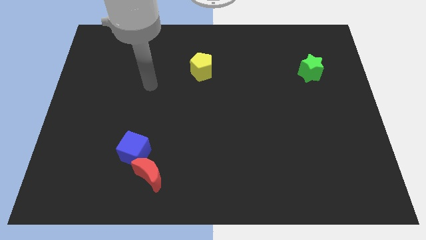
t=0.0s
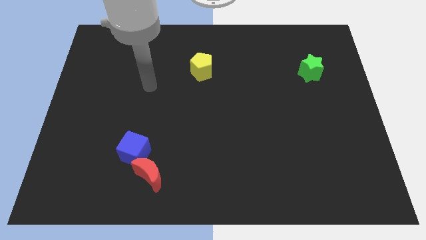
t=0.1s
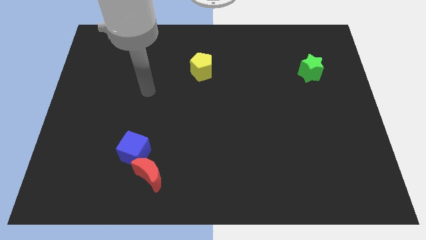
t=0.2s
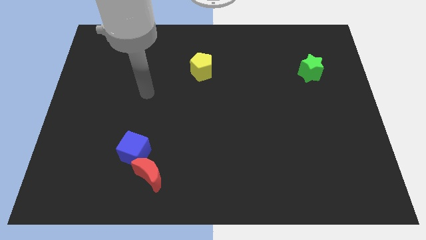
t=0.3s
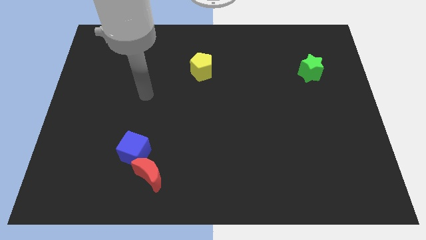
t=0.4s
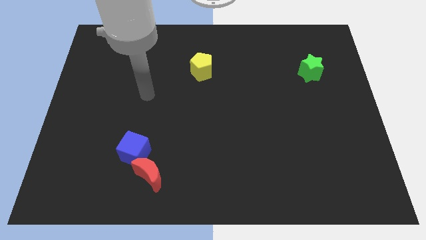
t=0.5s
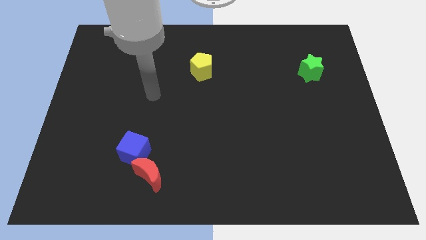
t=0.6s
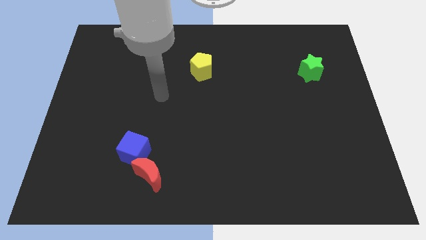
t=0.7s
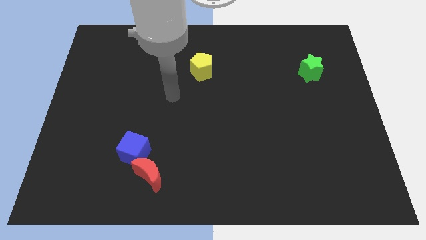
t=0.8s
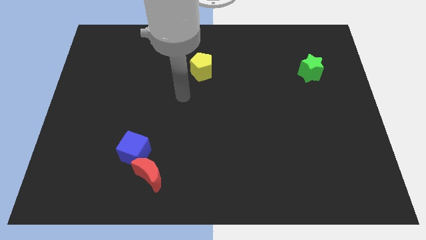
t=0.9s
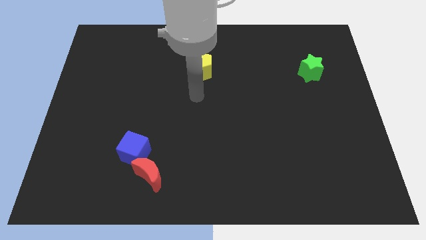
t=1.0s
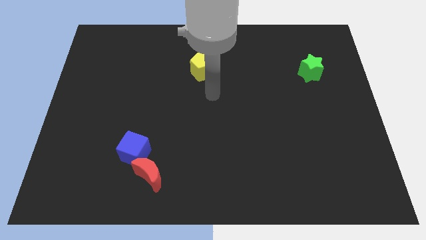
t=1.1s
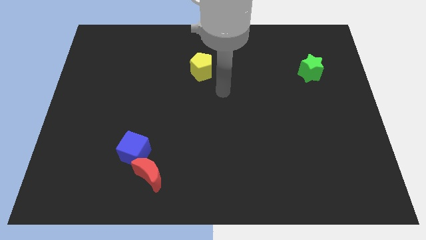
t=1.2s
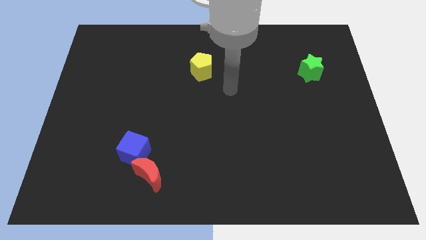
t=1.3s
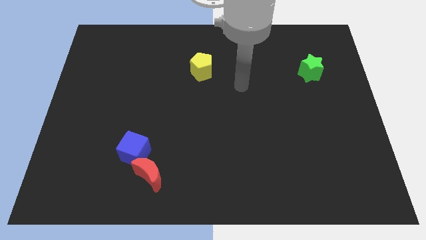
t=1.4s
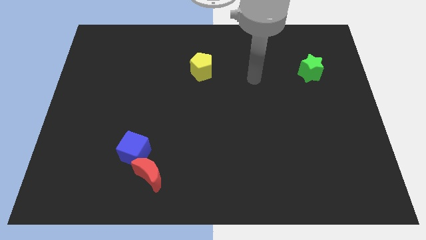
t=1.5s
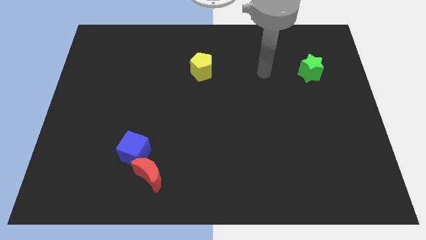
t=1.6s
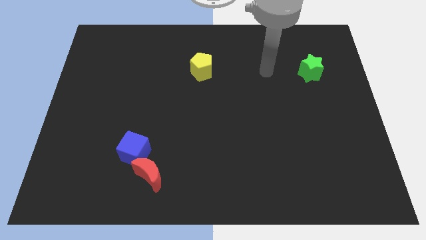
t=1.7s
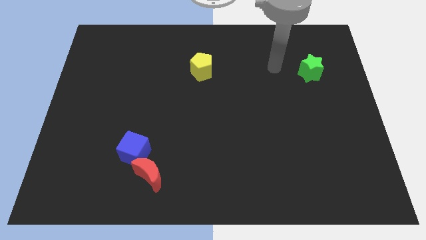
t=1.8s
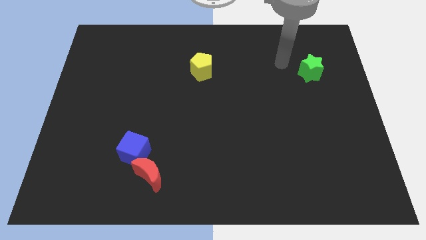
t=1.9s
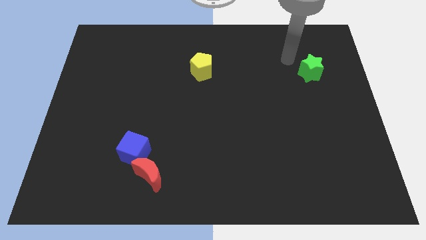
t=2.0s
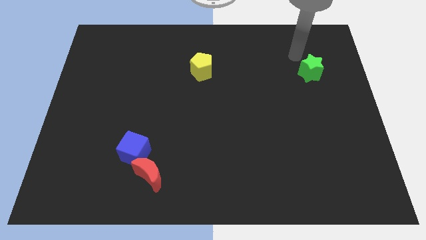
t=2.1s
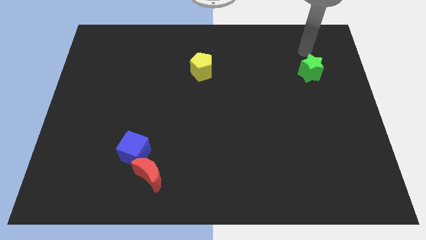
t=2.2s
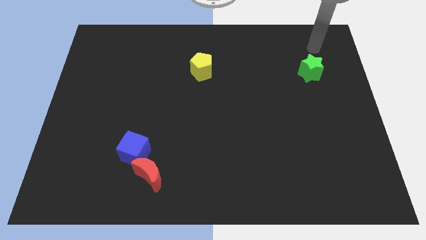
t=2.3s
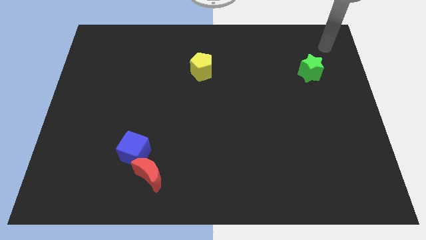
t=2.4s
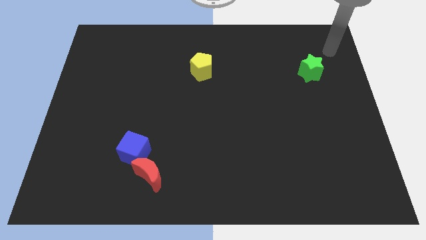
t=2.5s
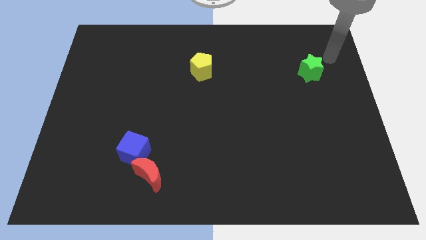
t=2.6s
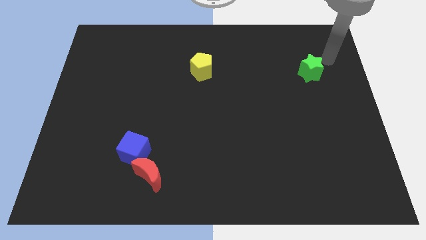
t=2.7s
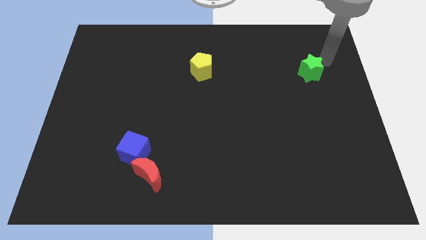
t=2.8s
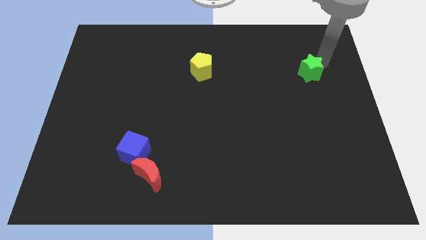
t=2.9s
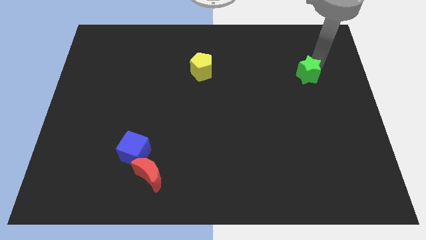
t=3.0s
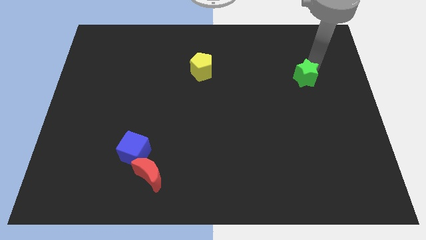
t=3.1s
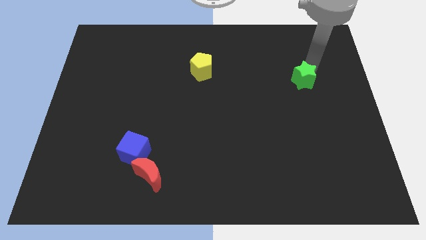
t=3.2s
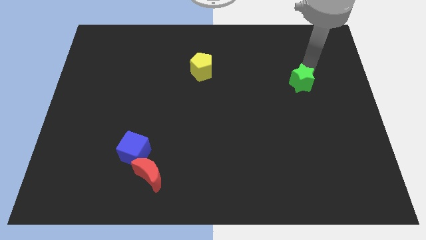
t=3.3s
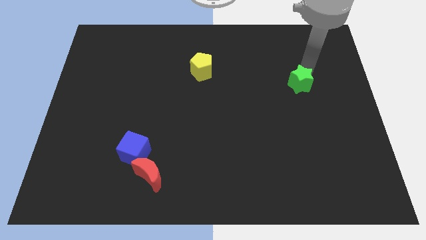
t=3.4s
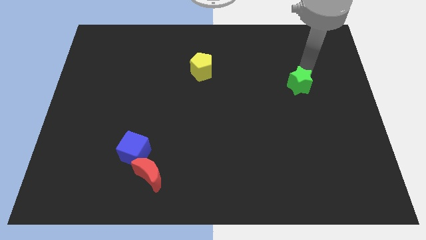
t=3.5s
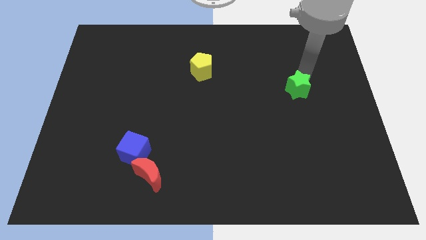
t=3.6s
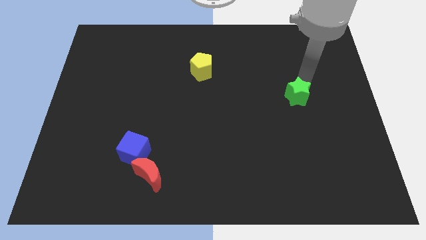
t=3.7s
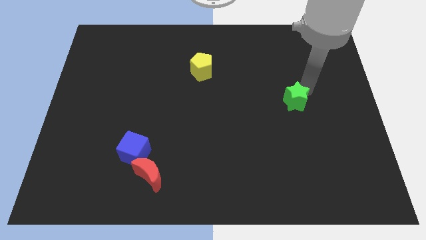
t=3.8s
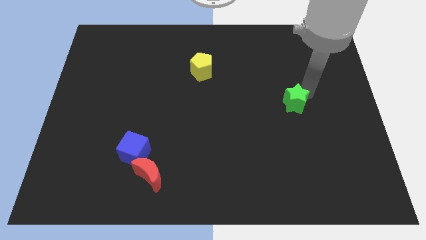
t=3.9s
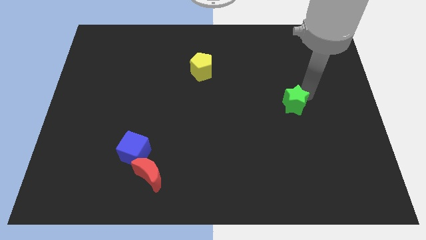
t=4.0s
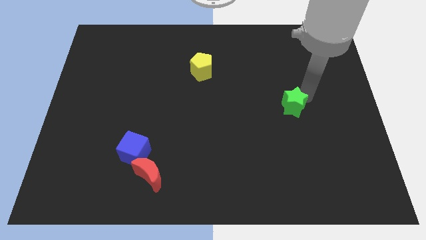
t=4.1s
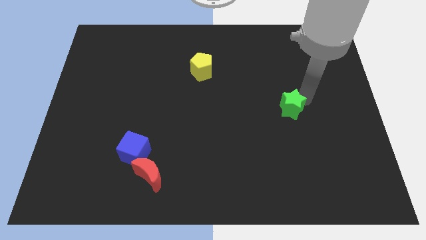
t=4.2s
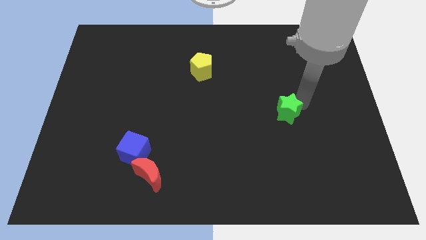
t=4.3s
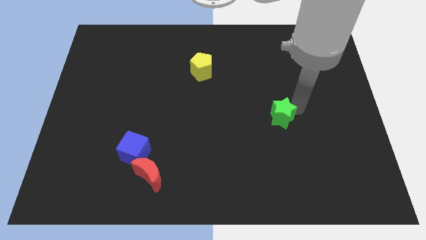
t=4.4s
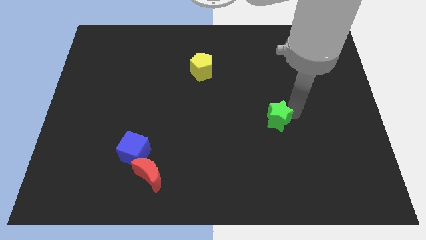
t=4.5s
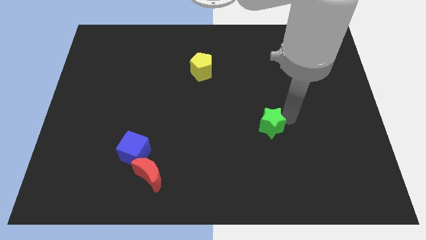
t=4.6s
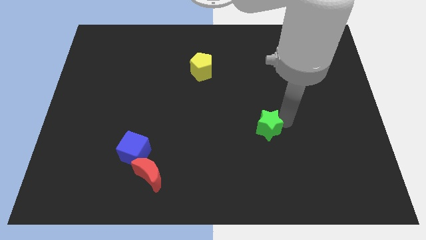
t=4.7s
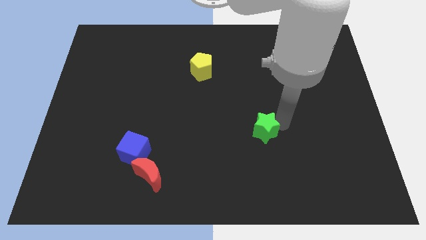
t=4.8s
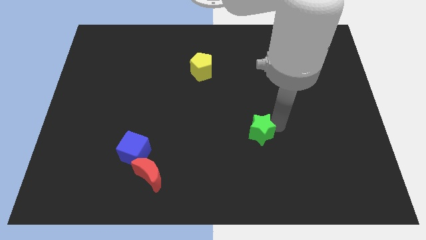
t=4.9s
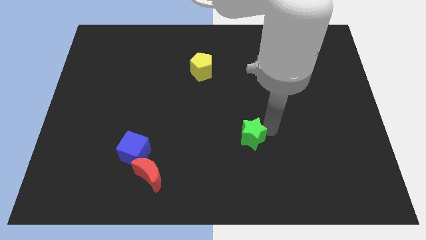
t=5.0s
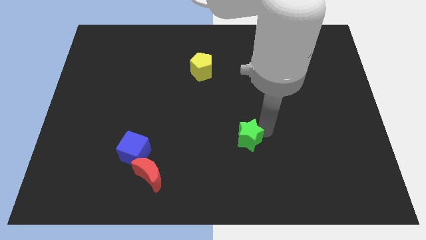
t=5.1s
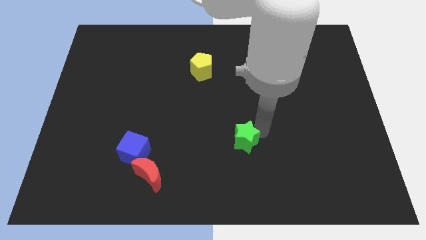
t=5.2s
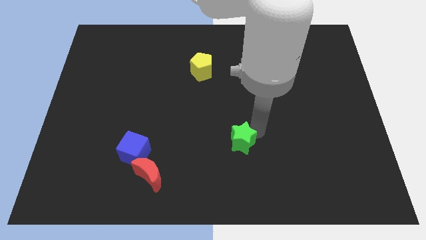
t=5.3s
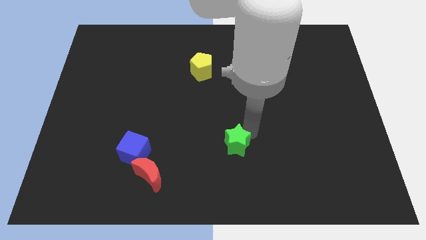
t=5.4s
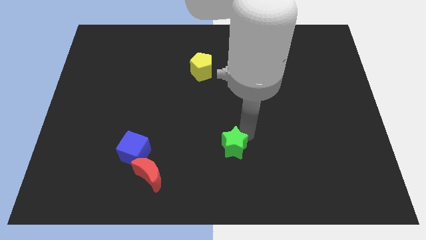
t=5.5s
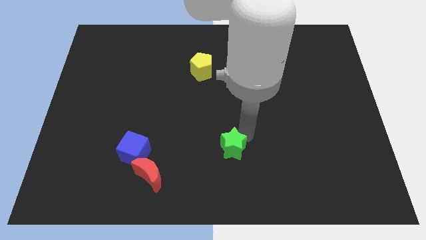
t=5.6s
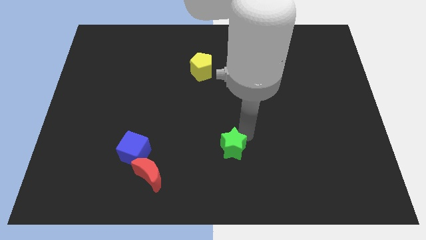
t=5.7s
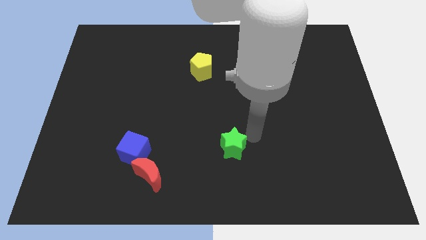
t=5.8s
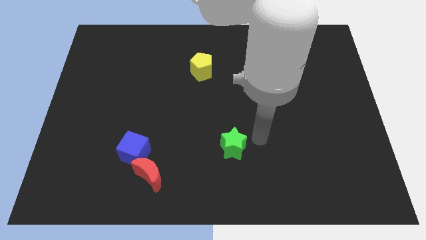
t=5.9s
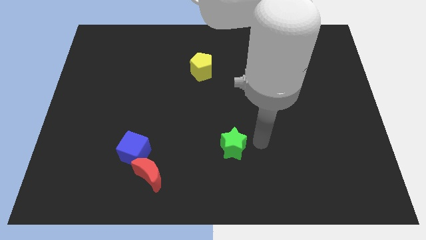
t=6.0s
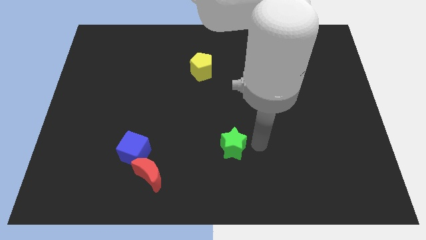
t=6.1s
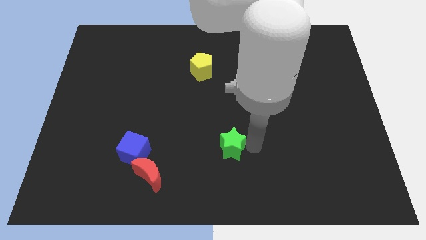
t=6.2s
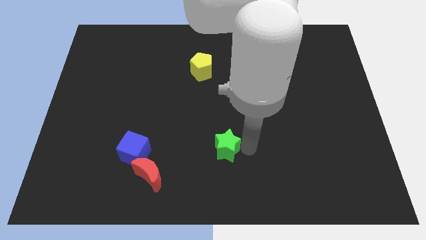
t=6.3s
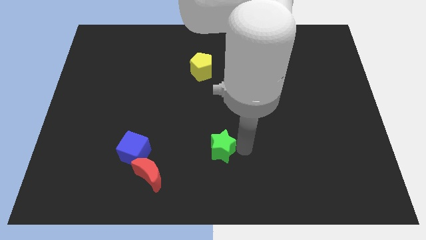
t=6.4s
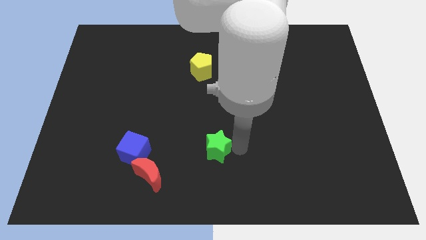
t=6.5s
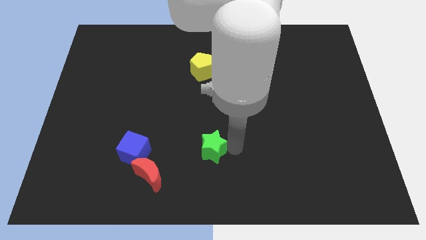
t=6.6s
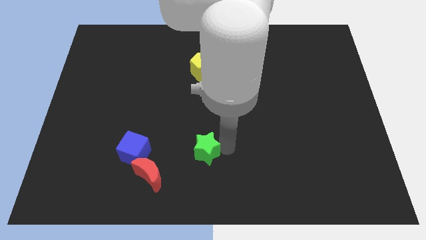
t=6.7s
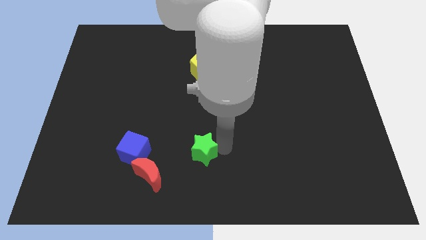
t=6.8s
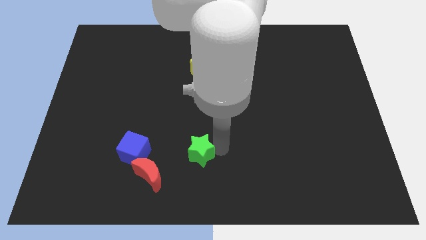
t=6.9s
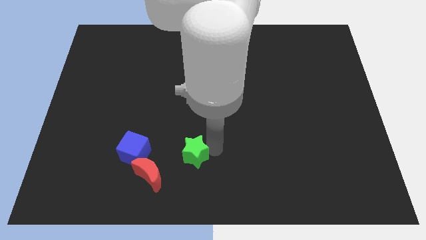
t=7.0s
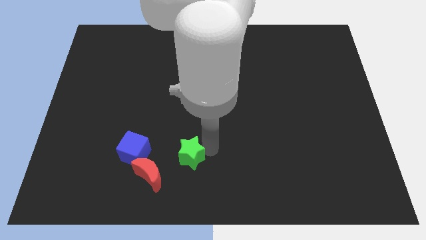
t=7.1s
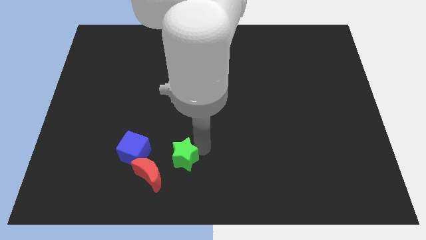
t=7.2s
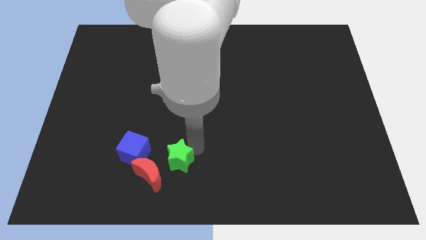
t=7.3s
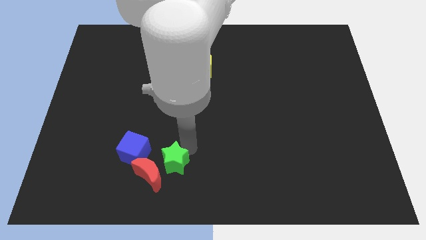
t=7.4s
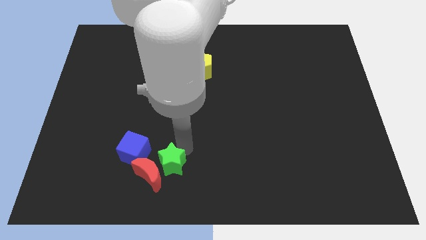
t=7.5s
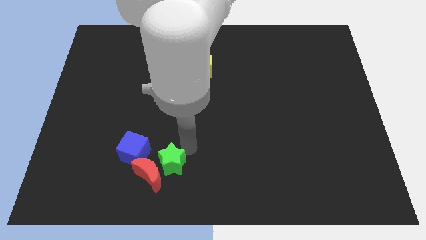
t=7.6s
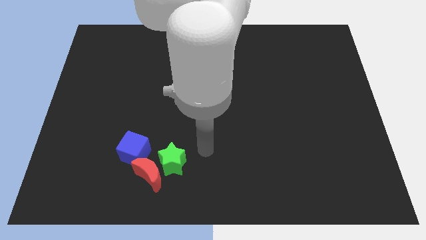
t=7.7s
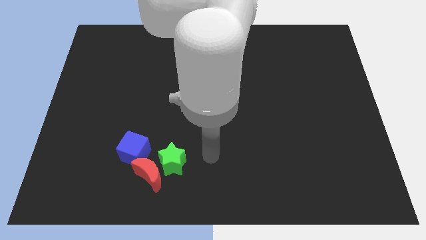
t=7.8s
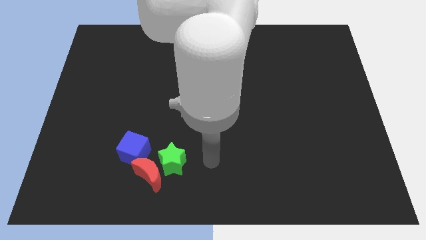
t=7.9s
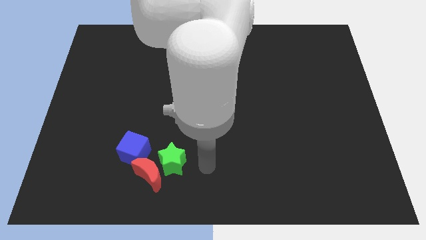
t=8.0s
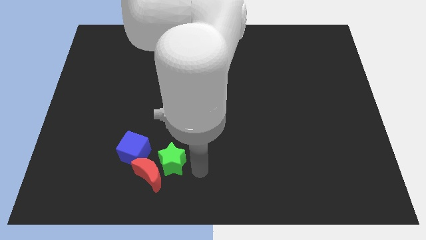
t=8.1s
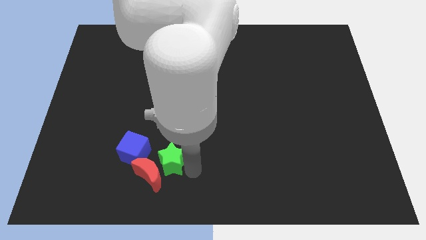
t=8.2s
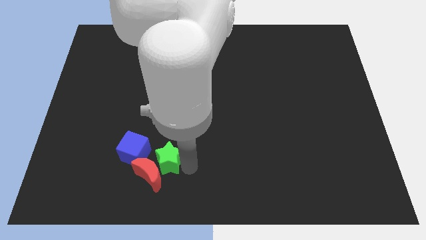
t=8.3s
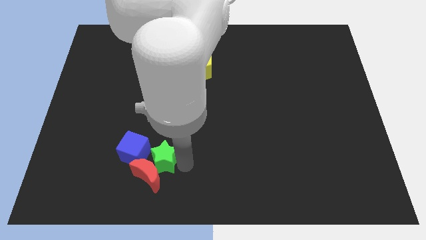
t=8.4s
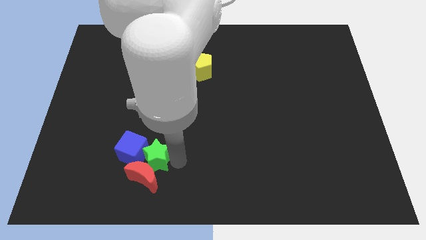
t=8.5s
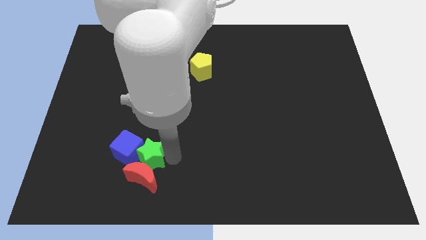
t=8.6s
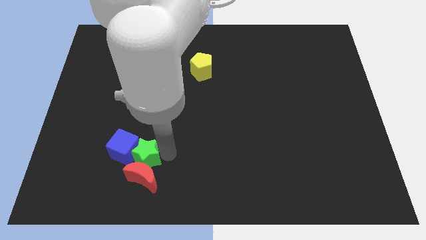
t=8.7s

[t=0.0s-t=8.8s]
push the green block next to the cube
